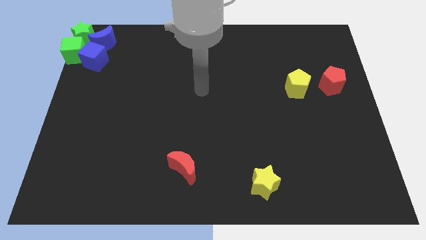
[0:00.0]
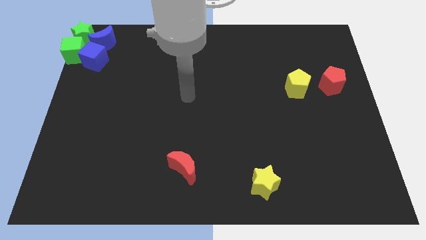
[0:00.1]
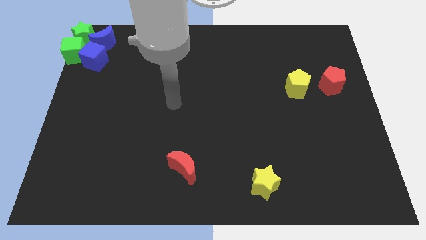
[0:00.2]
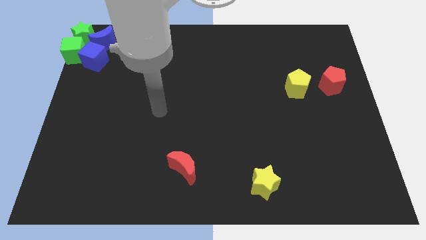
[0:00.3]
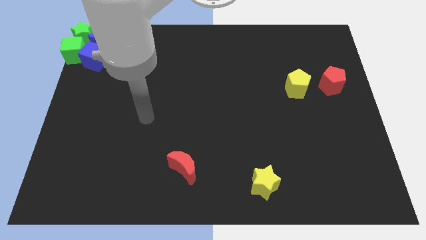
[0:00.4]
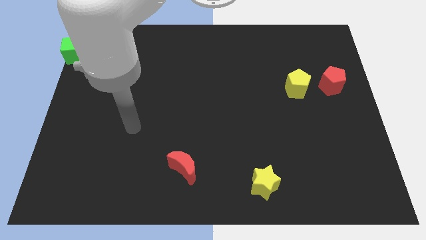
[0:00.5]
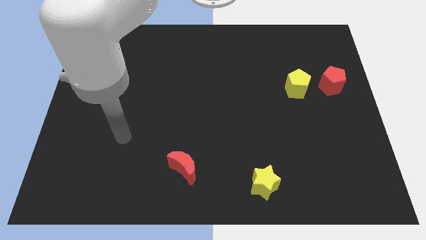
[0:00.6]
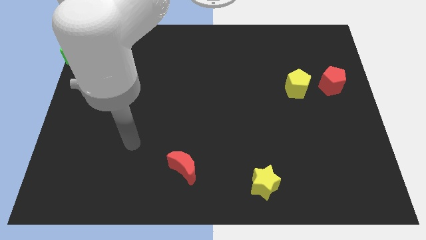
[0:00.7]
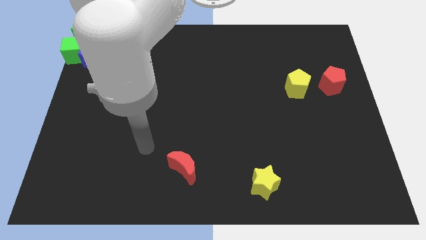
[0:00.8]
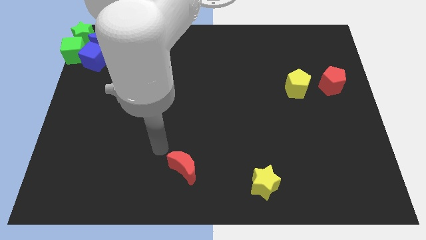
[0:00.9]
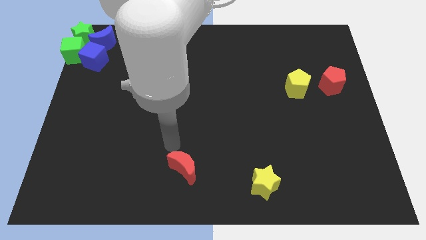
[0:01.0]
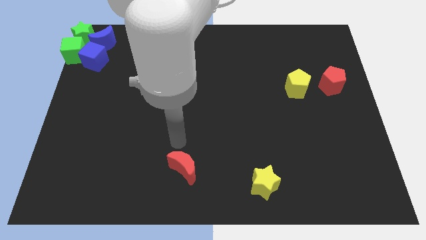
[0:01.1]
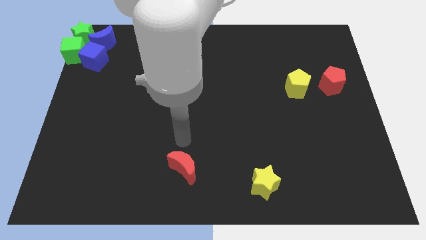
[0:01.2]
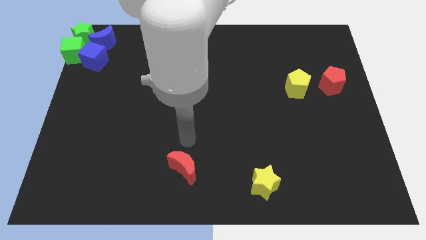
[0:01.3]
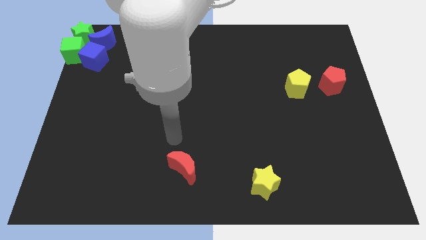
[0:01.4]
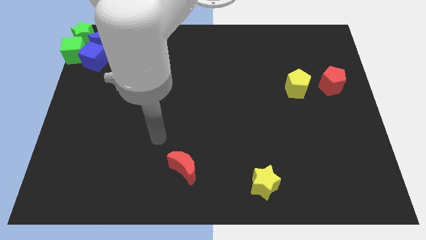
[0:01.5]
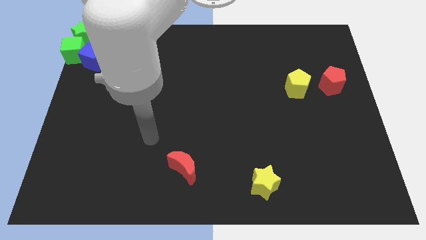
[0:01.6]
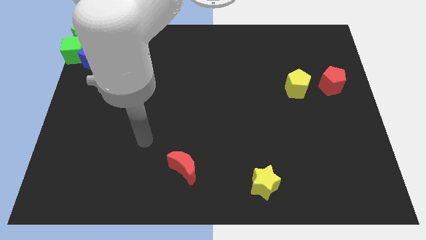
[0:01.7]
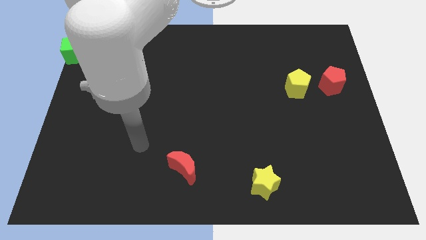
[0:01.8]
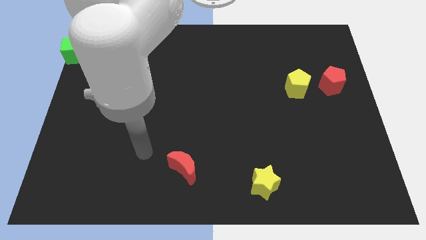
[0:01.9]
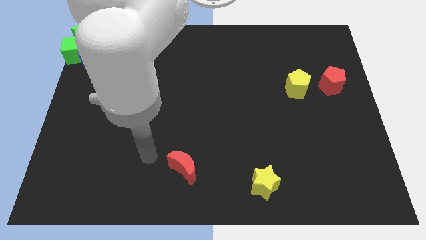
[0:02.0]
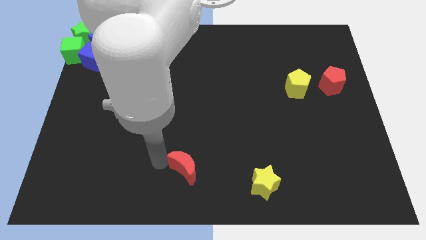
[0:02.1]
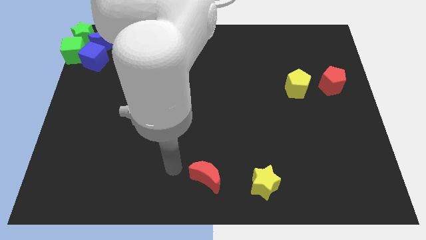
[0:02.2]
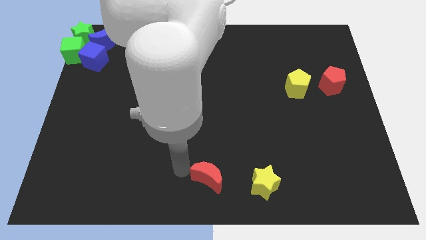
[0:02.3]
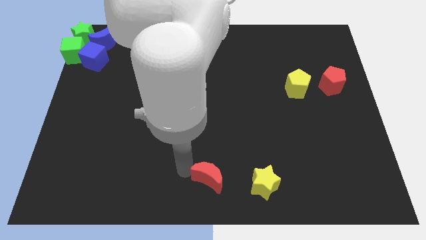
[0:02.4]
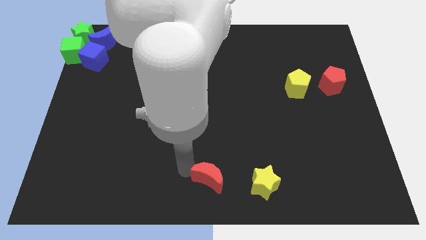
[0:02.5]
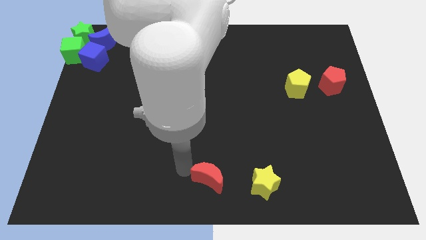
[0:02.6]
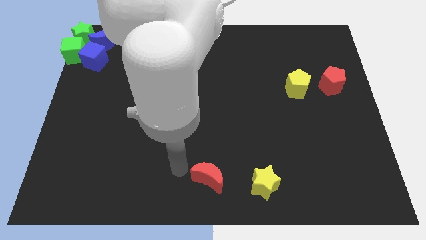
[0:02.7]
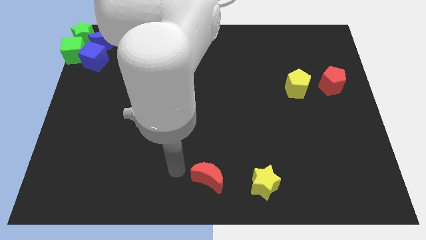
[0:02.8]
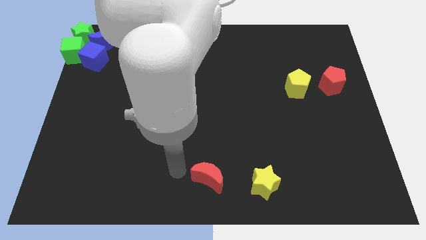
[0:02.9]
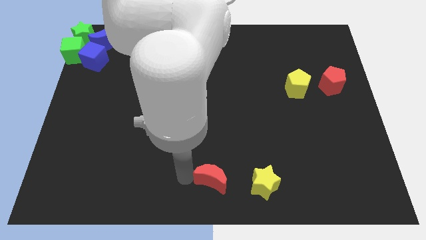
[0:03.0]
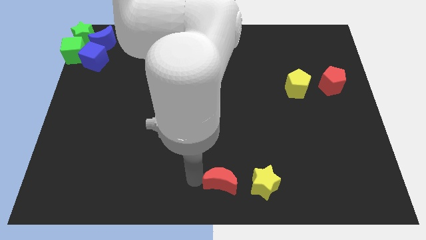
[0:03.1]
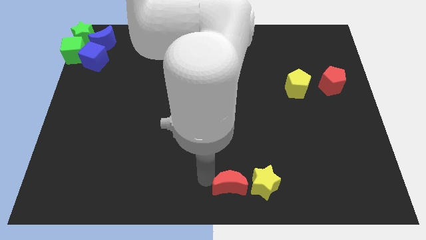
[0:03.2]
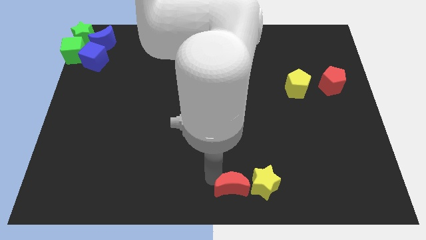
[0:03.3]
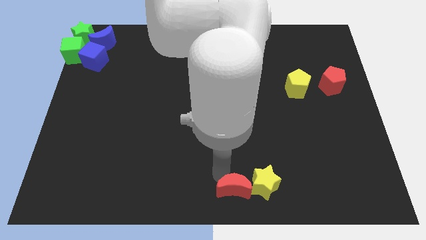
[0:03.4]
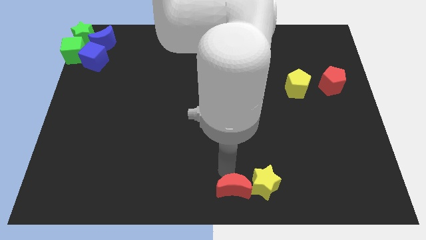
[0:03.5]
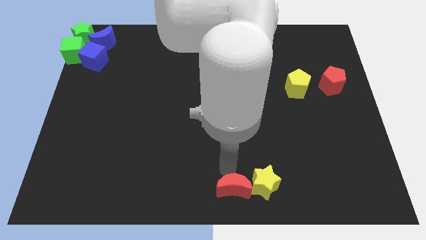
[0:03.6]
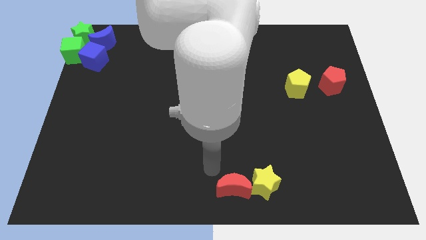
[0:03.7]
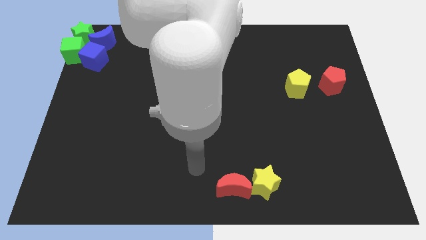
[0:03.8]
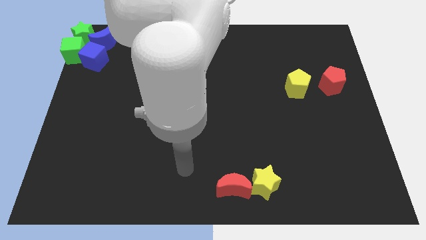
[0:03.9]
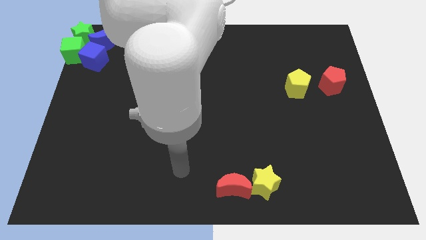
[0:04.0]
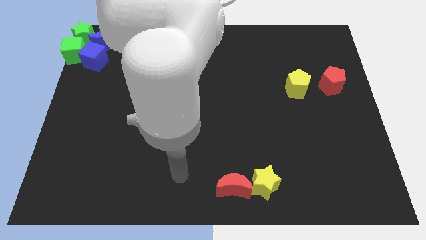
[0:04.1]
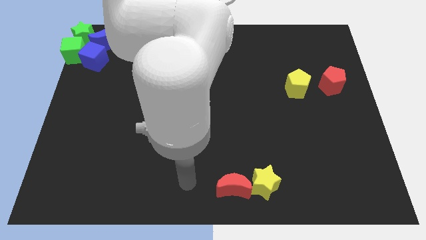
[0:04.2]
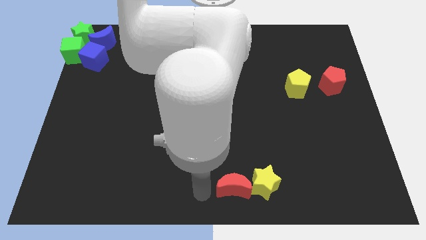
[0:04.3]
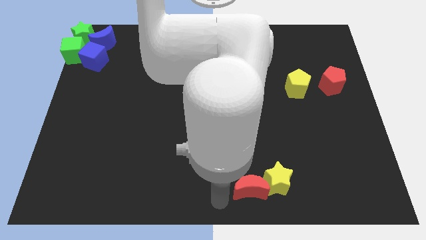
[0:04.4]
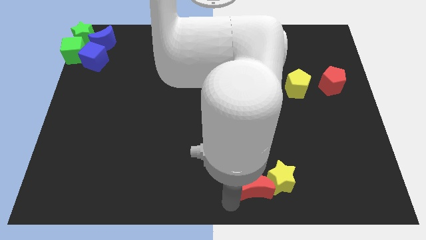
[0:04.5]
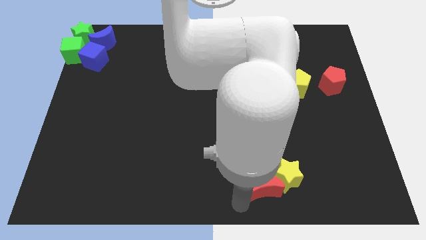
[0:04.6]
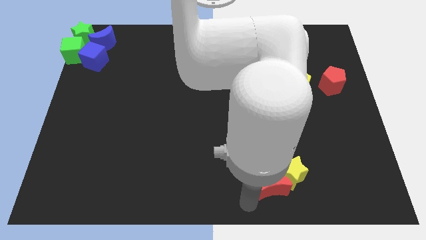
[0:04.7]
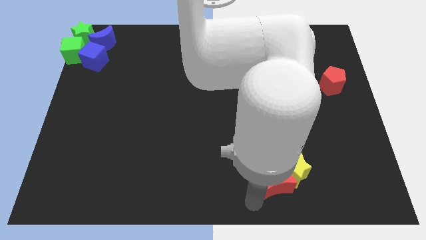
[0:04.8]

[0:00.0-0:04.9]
push the red crescent to the left of the yellow star

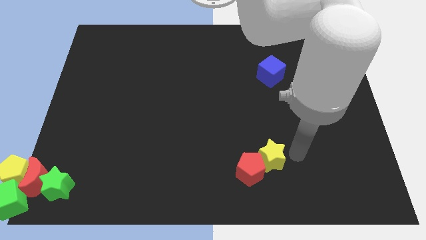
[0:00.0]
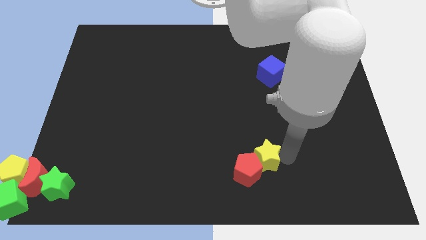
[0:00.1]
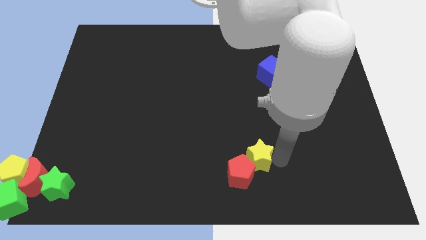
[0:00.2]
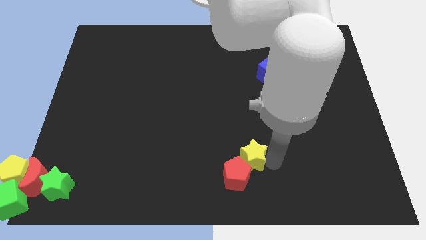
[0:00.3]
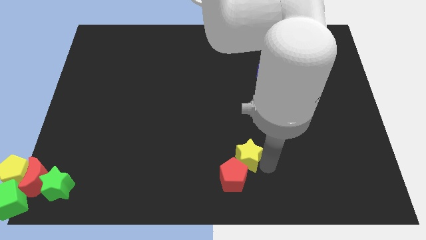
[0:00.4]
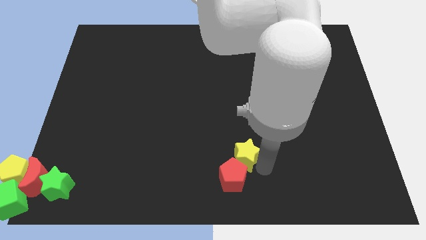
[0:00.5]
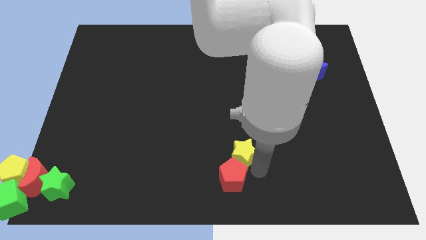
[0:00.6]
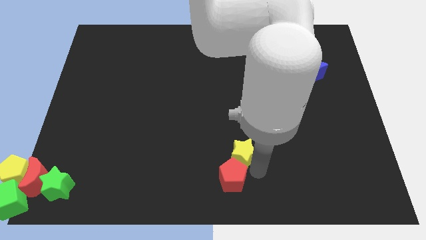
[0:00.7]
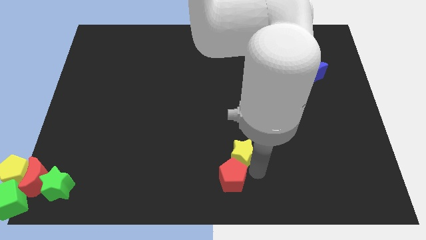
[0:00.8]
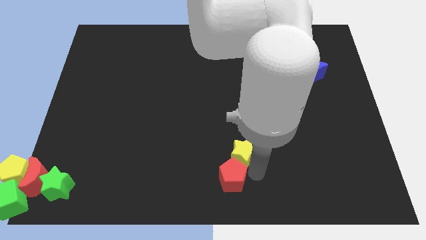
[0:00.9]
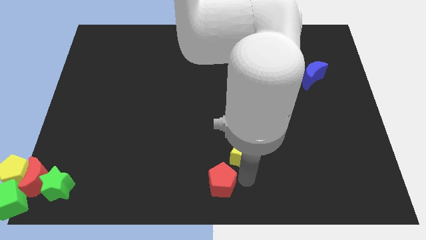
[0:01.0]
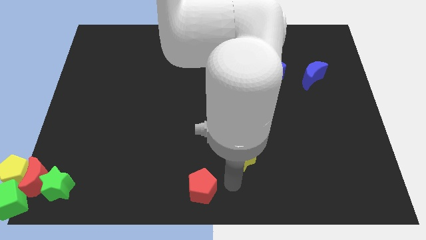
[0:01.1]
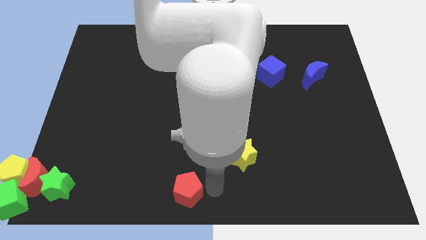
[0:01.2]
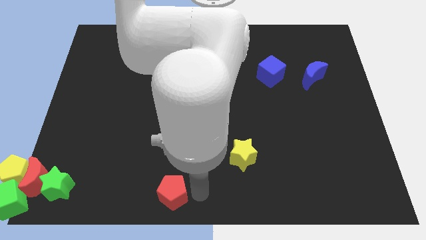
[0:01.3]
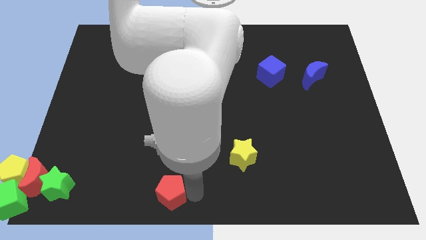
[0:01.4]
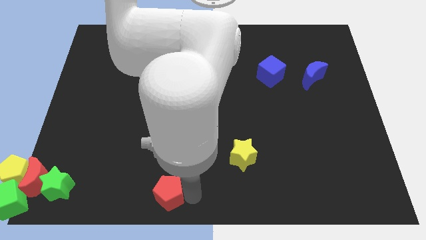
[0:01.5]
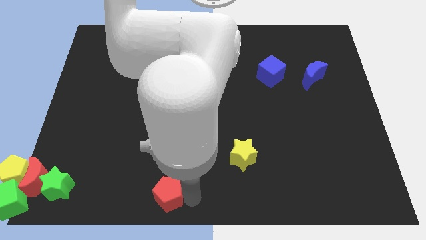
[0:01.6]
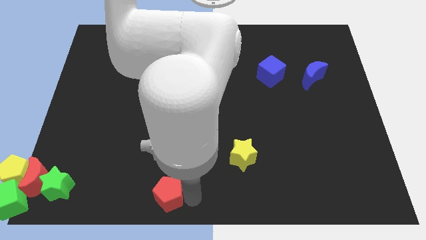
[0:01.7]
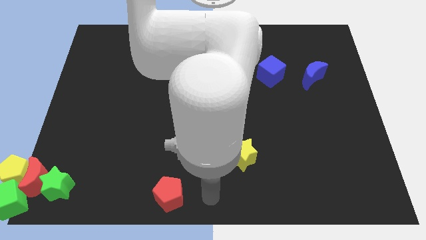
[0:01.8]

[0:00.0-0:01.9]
place the red pentagon diagonal to the yellow star

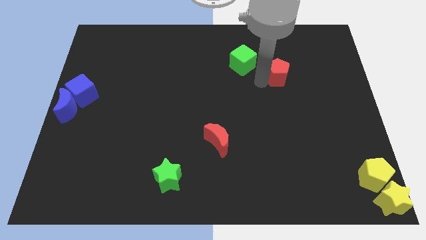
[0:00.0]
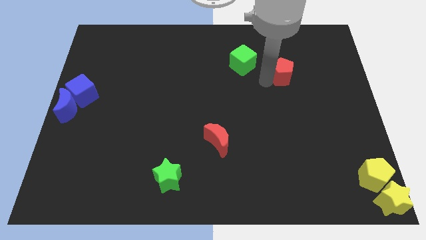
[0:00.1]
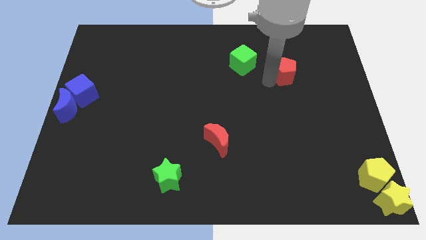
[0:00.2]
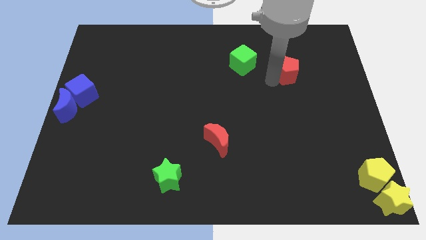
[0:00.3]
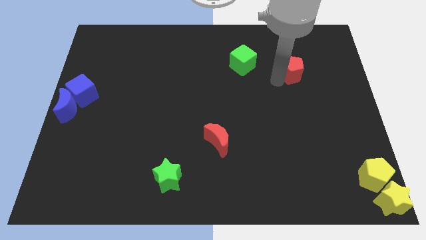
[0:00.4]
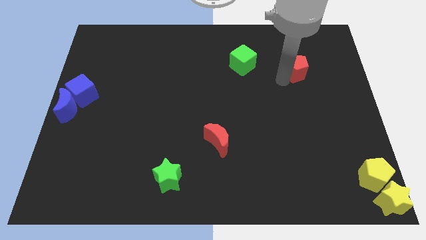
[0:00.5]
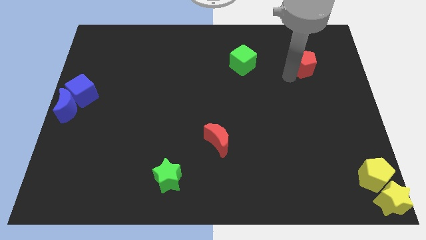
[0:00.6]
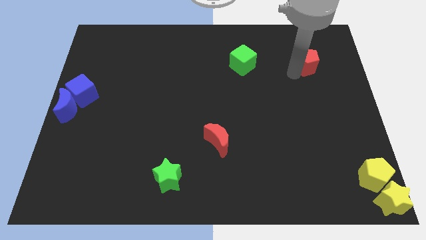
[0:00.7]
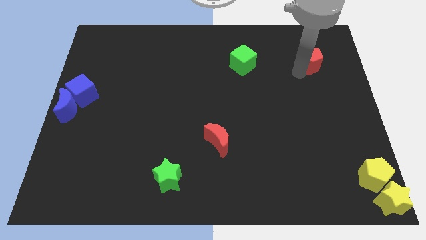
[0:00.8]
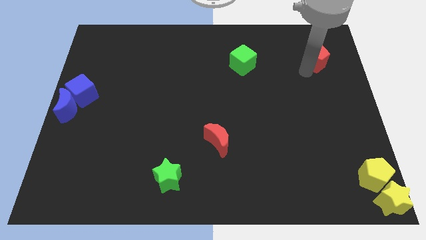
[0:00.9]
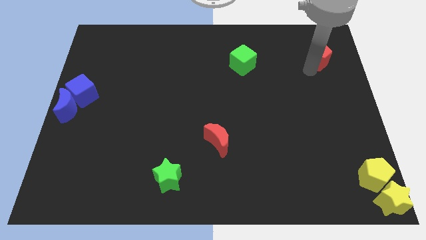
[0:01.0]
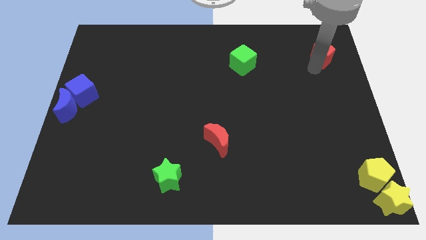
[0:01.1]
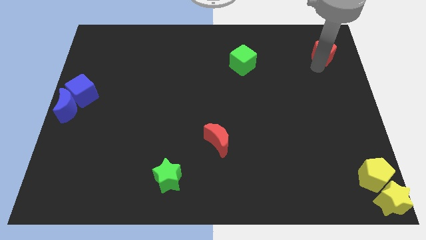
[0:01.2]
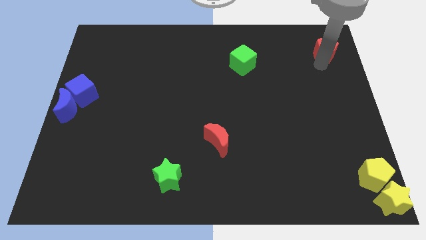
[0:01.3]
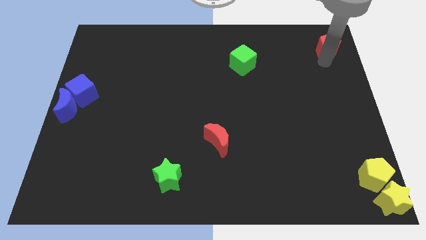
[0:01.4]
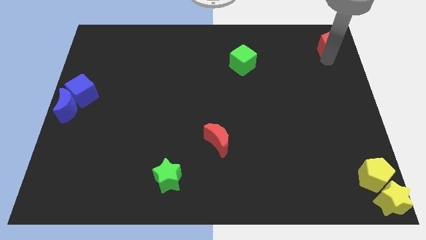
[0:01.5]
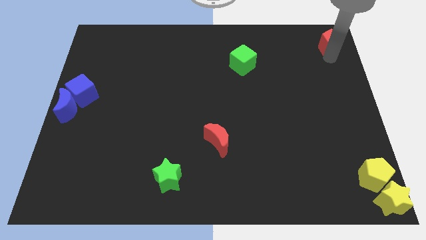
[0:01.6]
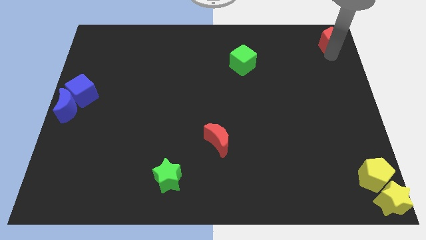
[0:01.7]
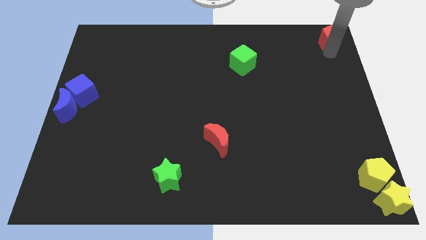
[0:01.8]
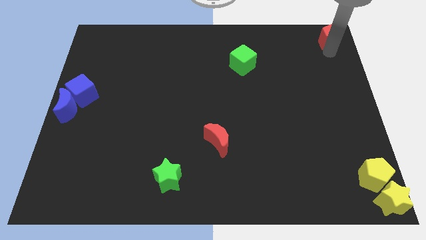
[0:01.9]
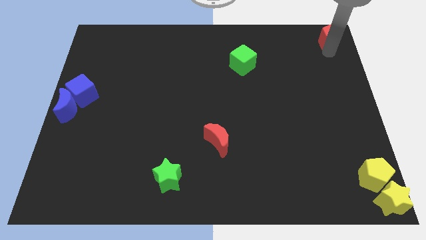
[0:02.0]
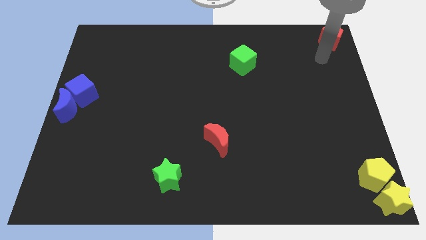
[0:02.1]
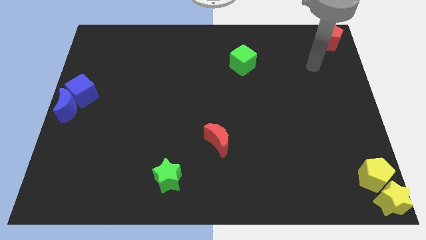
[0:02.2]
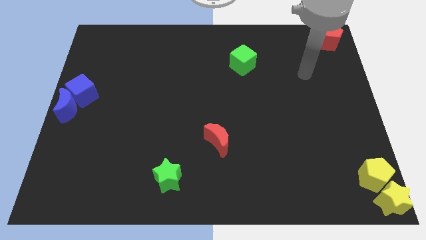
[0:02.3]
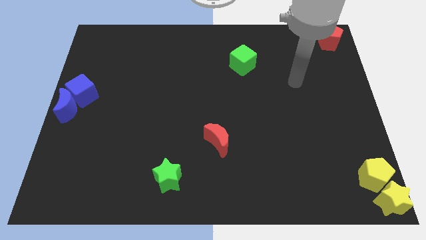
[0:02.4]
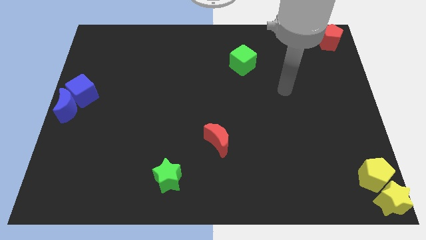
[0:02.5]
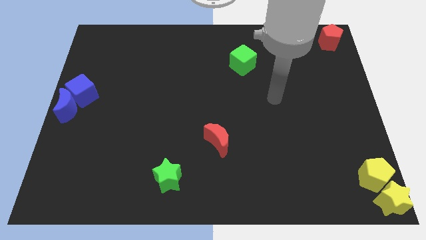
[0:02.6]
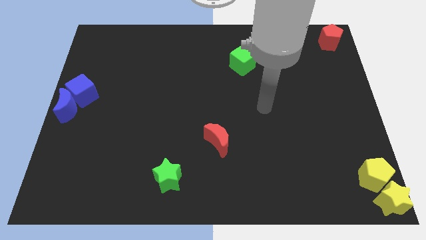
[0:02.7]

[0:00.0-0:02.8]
put the red pentagon at the top right corner of the board
